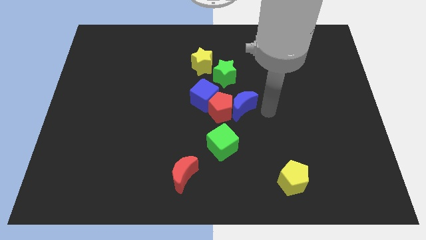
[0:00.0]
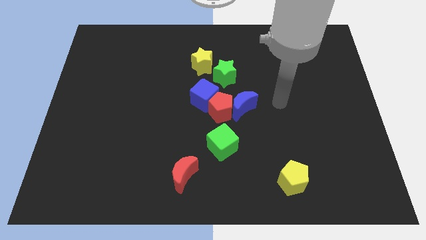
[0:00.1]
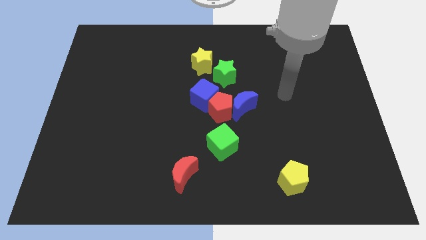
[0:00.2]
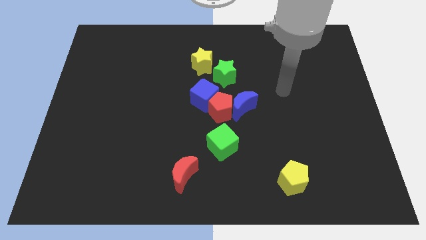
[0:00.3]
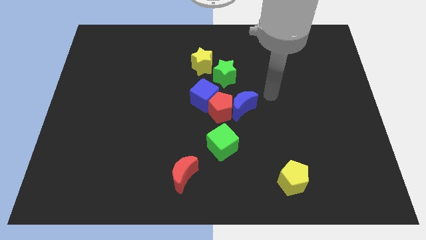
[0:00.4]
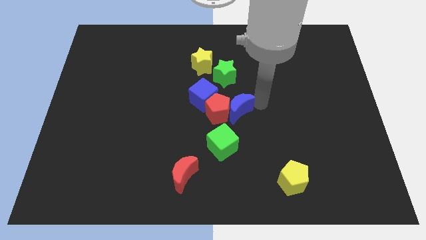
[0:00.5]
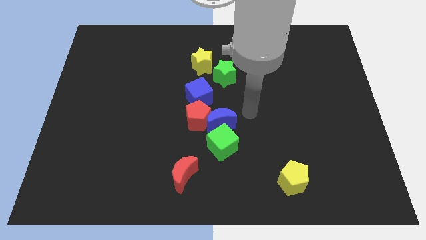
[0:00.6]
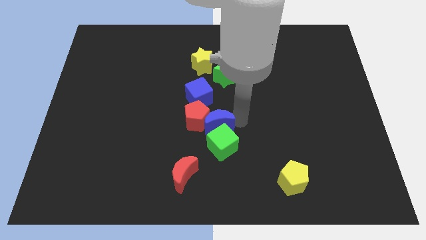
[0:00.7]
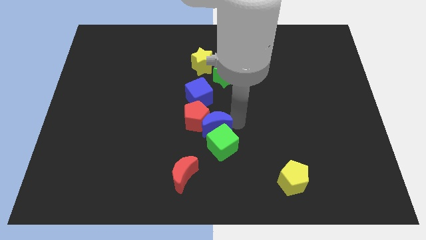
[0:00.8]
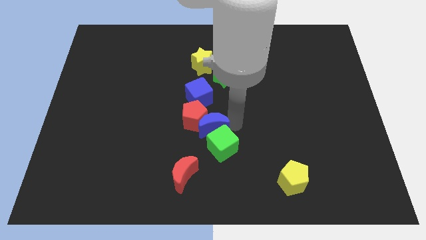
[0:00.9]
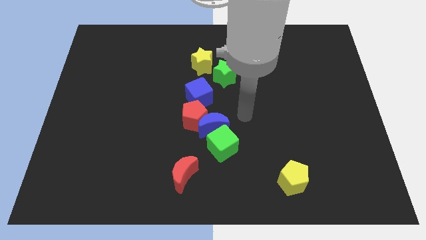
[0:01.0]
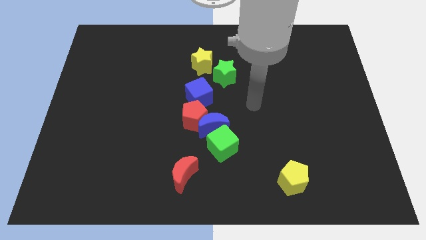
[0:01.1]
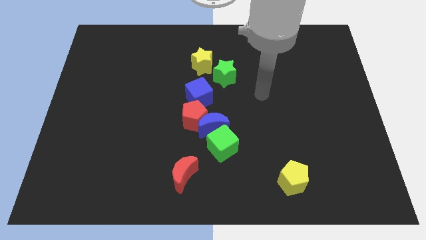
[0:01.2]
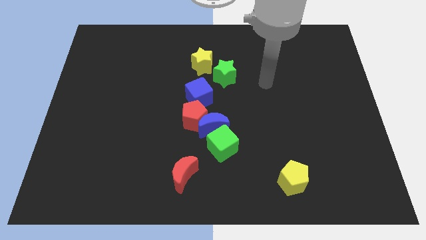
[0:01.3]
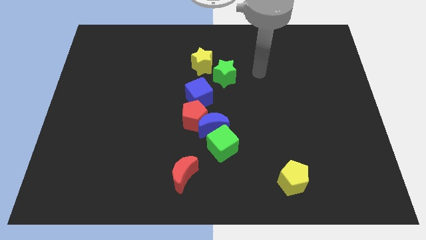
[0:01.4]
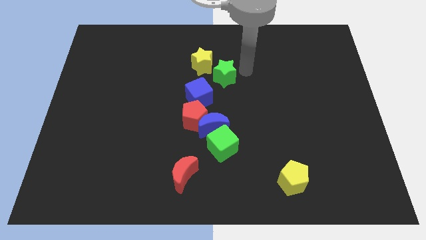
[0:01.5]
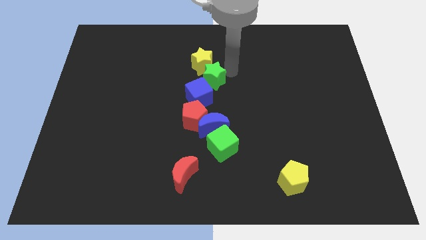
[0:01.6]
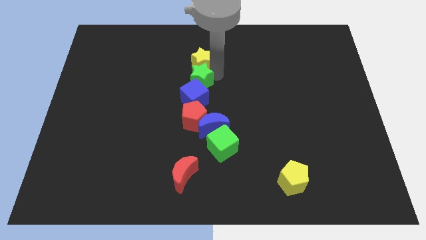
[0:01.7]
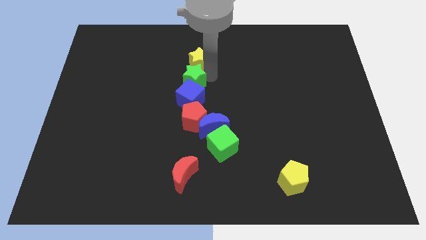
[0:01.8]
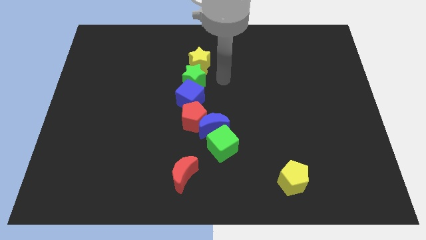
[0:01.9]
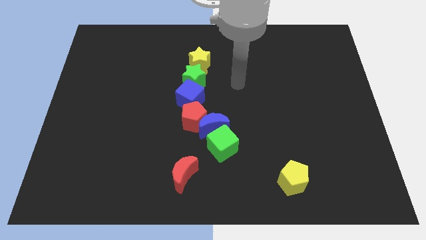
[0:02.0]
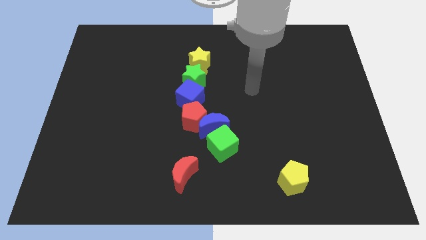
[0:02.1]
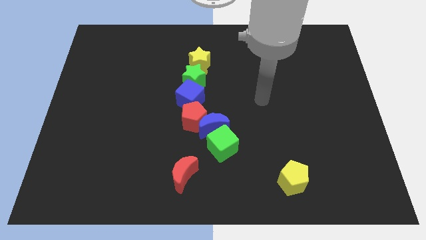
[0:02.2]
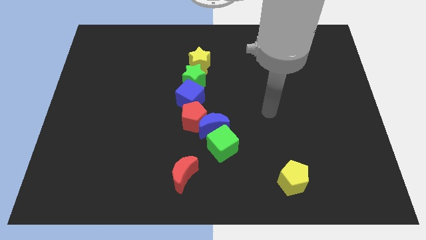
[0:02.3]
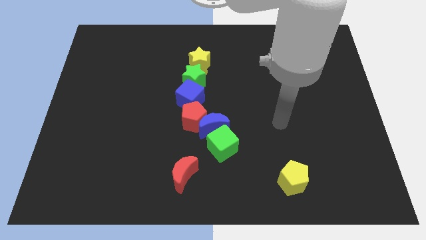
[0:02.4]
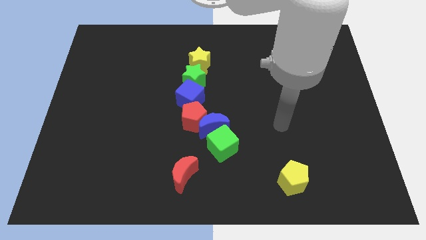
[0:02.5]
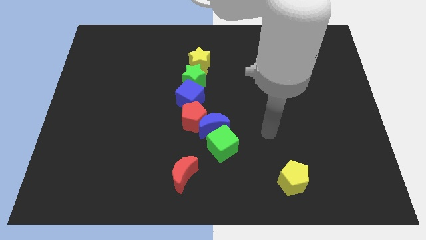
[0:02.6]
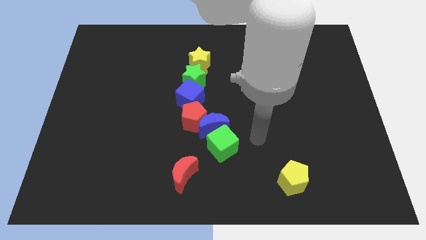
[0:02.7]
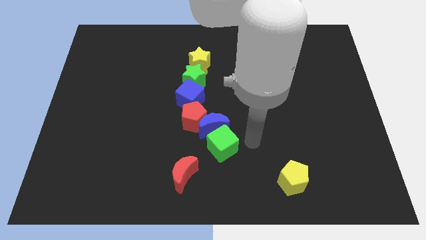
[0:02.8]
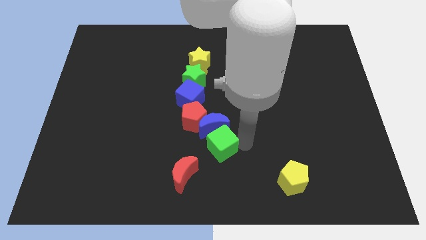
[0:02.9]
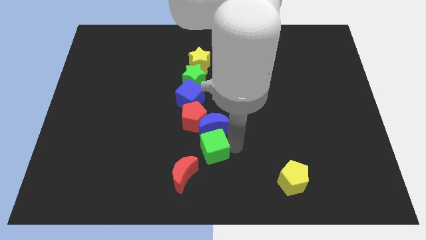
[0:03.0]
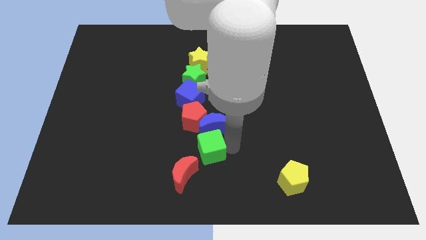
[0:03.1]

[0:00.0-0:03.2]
make all the blocks in a row

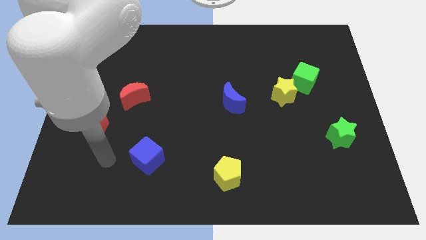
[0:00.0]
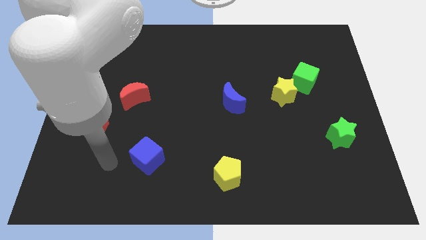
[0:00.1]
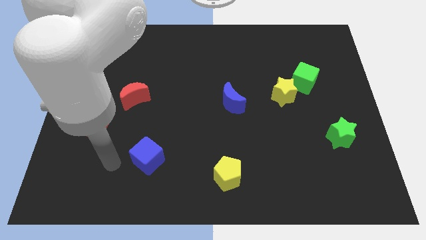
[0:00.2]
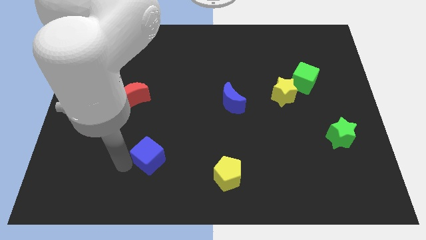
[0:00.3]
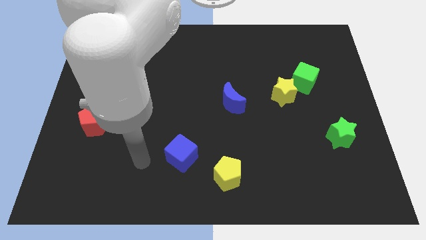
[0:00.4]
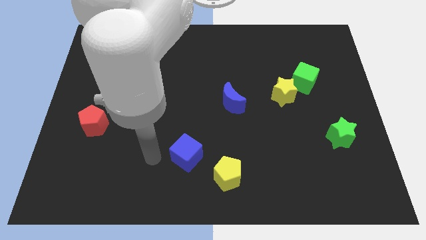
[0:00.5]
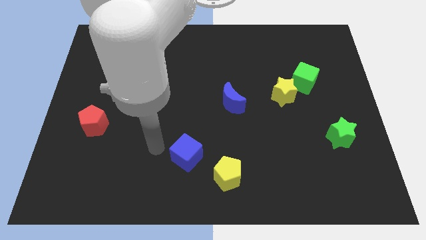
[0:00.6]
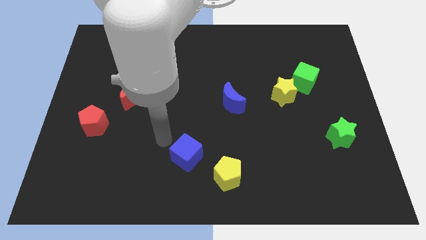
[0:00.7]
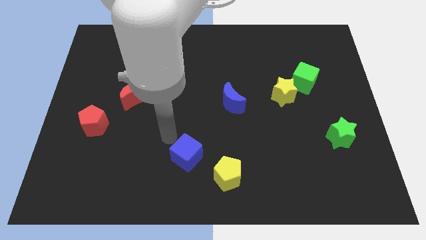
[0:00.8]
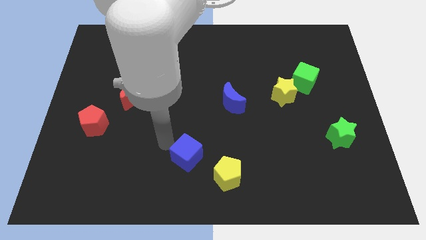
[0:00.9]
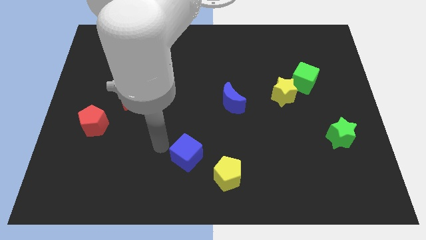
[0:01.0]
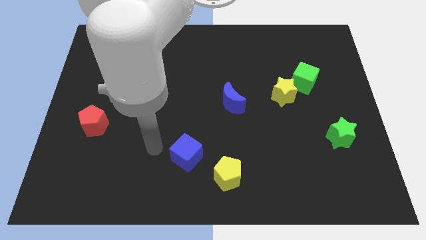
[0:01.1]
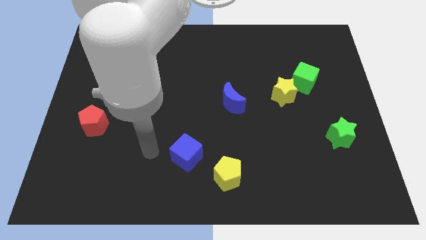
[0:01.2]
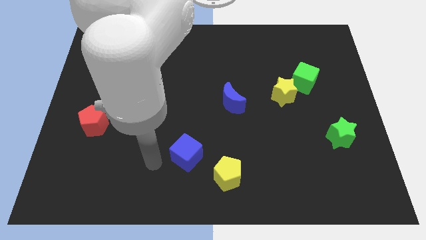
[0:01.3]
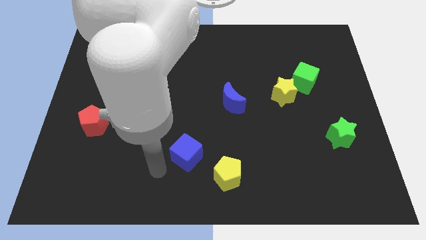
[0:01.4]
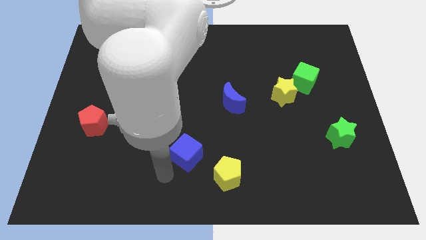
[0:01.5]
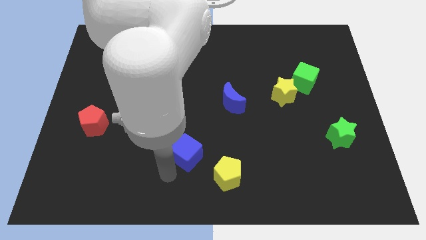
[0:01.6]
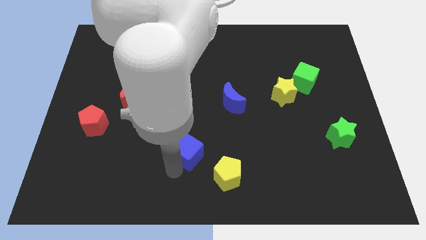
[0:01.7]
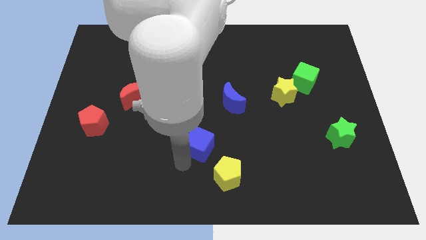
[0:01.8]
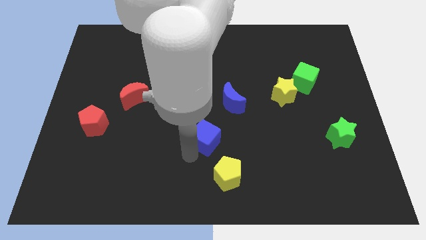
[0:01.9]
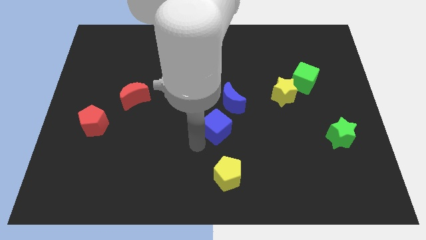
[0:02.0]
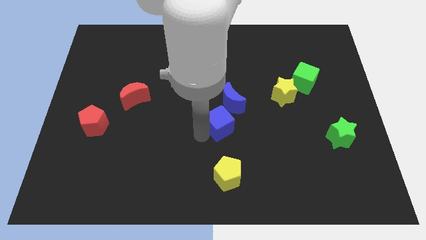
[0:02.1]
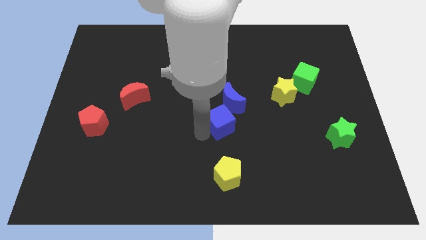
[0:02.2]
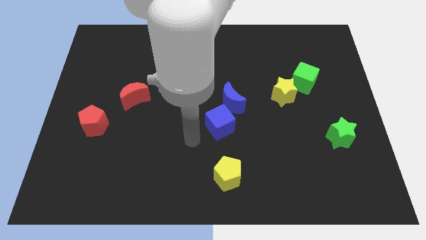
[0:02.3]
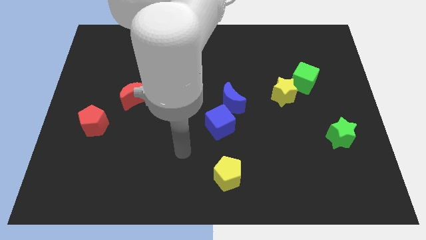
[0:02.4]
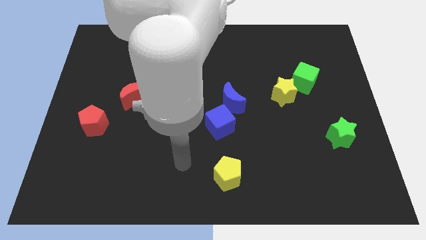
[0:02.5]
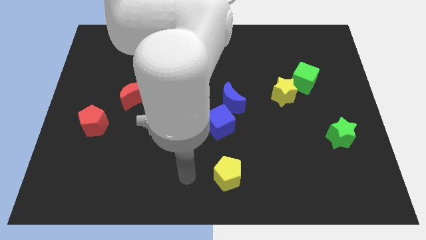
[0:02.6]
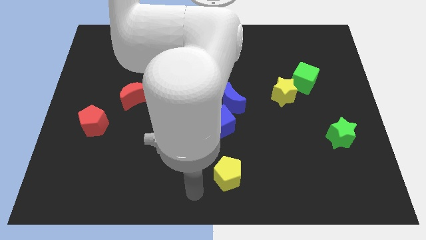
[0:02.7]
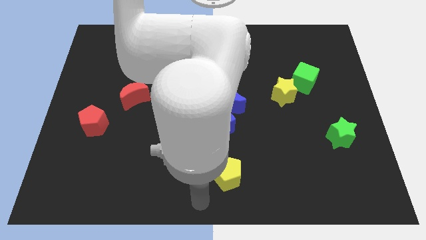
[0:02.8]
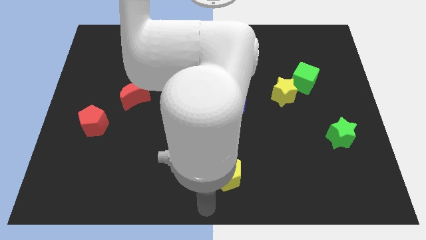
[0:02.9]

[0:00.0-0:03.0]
push the blue cube close to the blue crescent

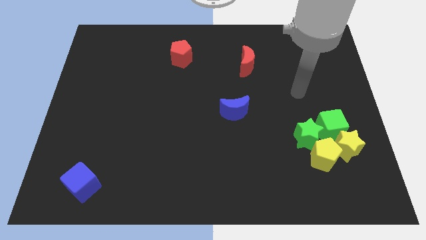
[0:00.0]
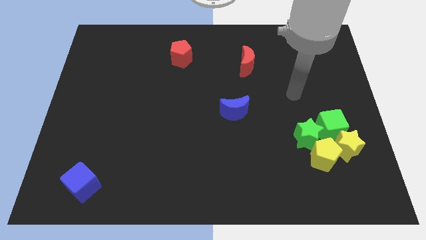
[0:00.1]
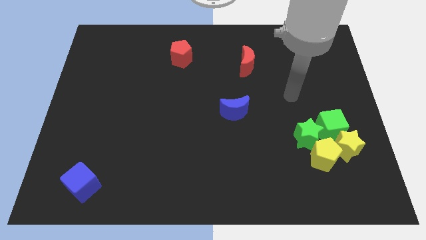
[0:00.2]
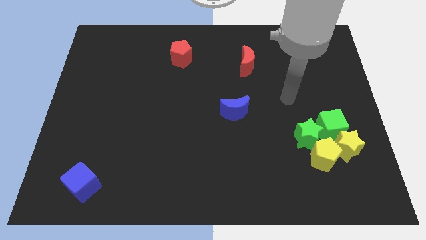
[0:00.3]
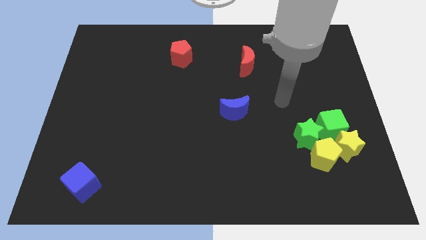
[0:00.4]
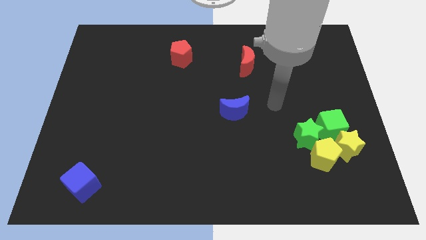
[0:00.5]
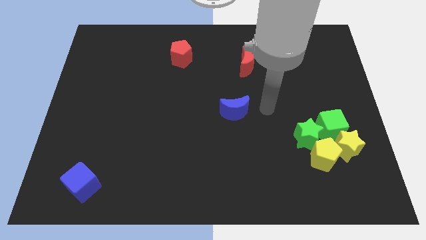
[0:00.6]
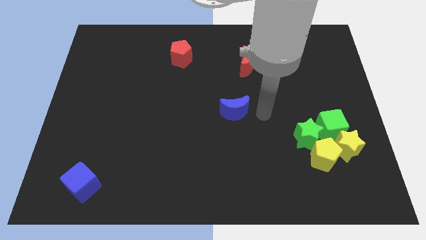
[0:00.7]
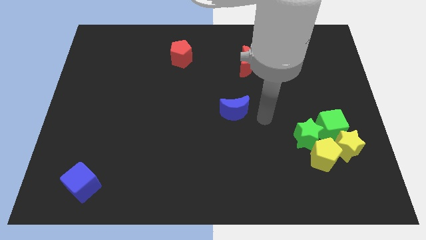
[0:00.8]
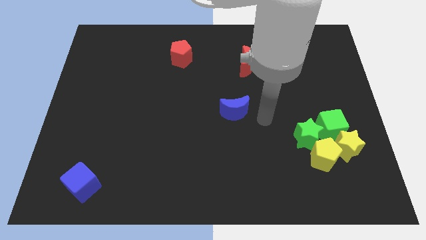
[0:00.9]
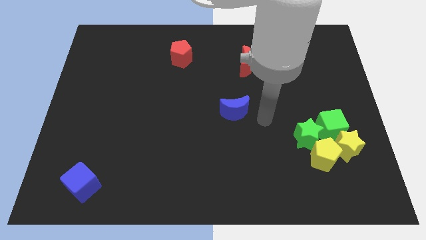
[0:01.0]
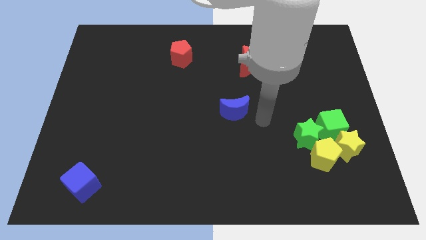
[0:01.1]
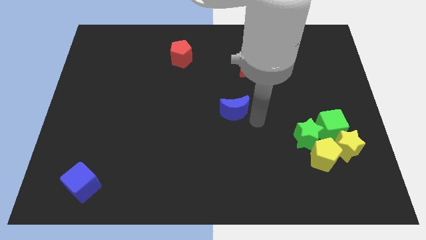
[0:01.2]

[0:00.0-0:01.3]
push your hand in between the blue moon and green star

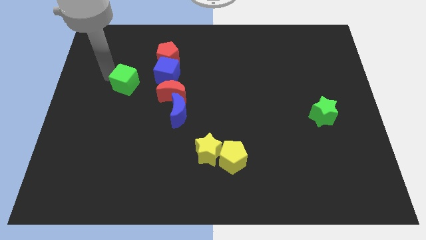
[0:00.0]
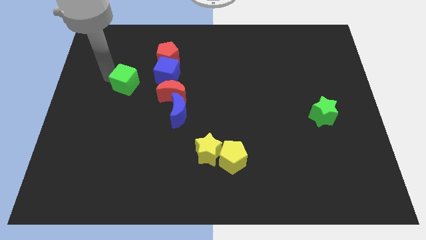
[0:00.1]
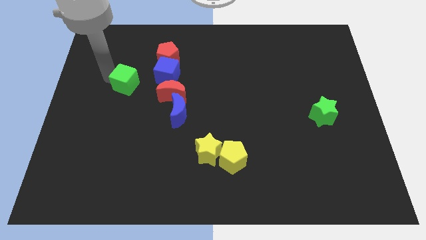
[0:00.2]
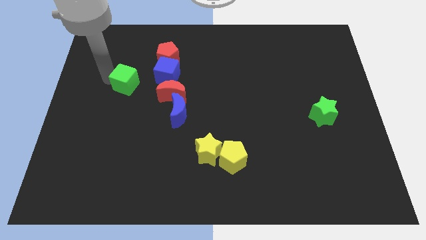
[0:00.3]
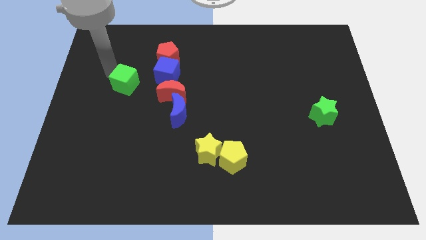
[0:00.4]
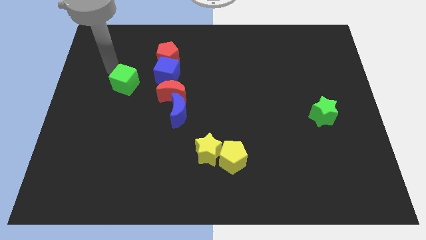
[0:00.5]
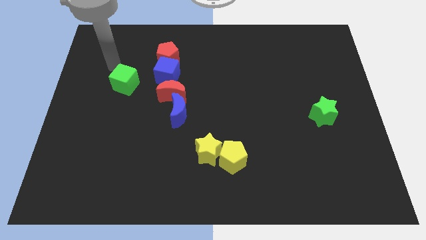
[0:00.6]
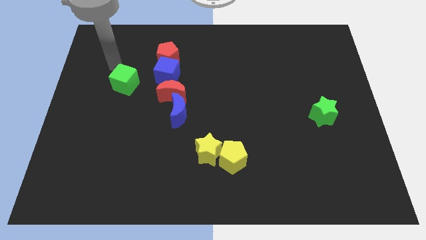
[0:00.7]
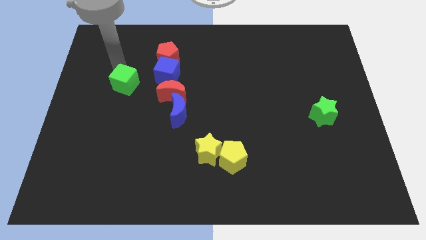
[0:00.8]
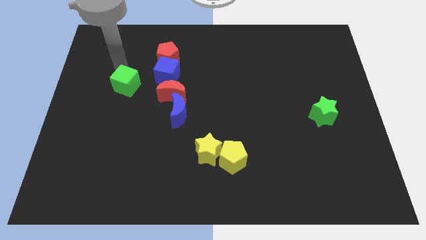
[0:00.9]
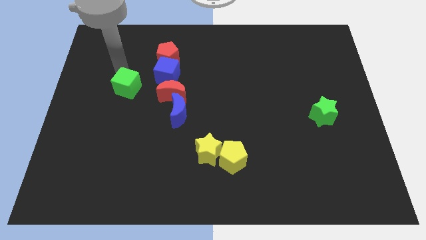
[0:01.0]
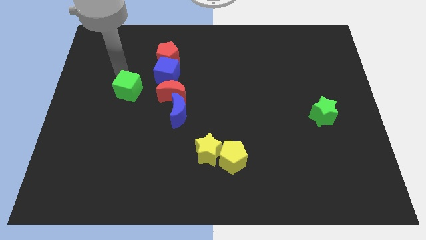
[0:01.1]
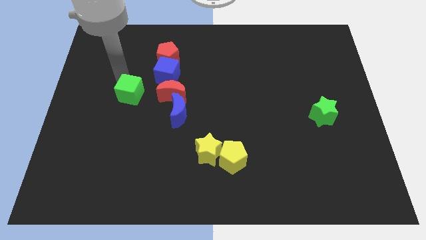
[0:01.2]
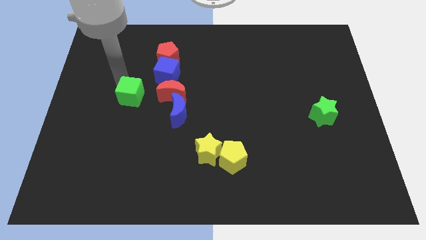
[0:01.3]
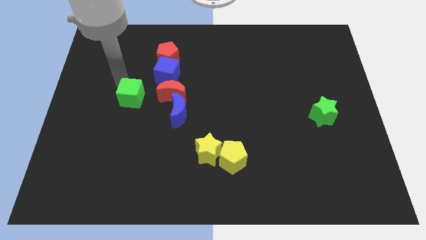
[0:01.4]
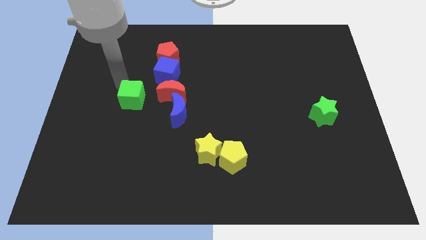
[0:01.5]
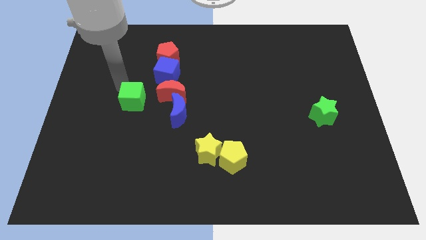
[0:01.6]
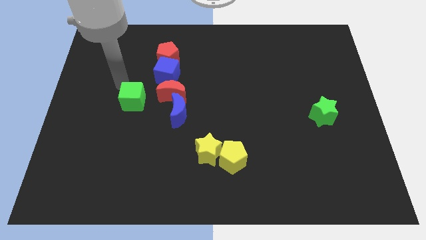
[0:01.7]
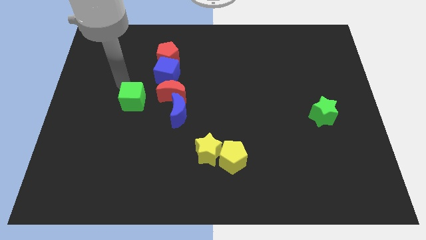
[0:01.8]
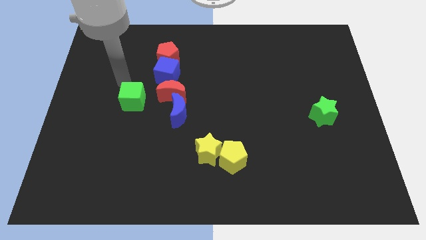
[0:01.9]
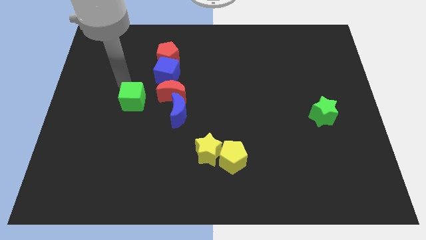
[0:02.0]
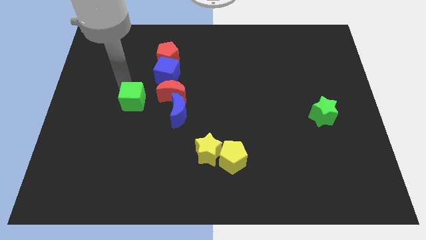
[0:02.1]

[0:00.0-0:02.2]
move the green cube to the left of the red moon
